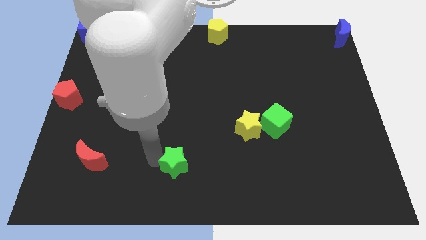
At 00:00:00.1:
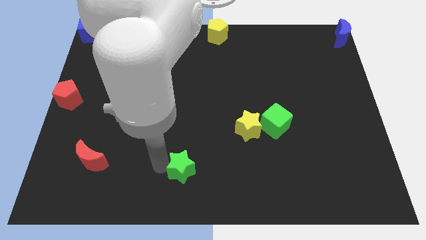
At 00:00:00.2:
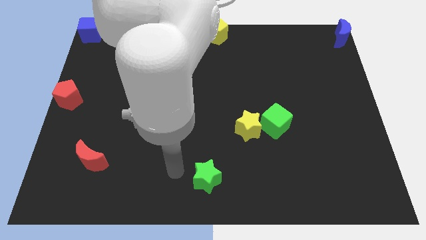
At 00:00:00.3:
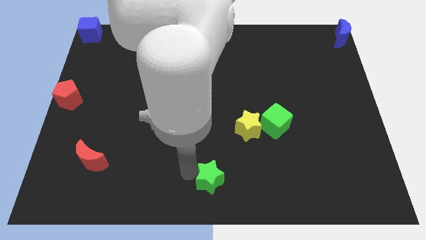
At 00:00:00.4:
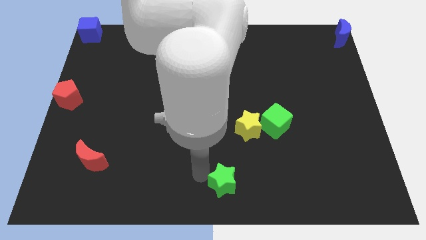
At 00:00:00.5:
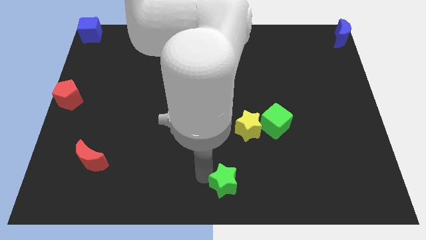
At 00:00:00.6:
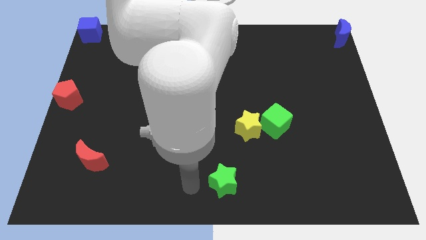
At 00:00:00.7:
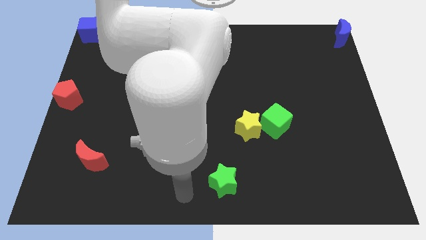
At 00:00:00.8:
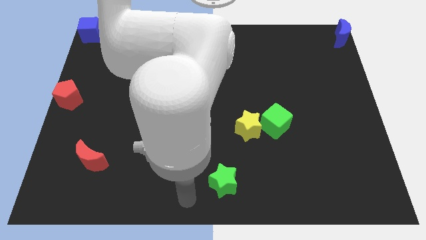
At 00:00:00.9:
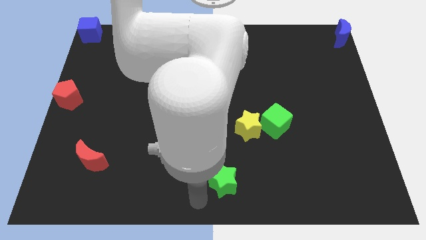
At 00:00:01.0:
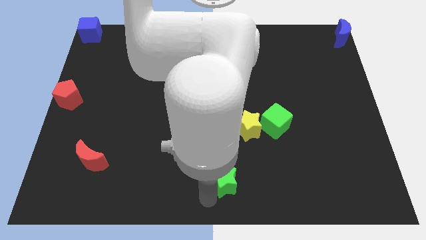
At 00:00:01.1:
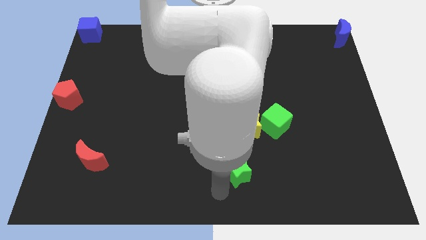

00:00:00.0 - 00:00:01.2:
push the green star to the right of the board

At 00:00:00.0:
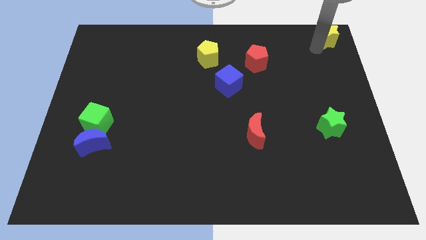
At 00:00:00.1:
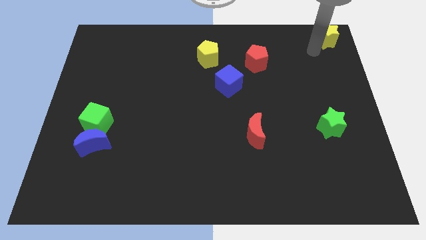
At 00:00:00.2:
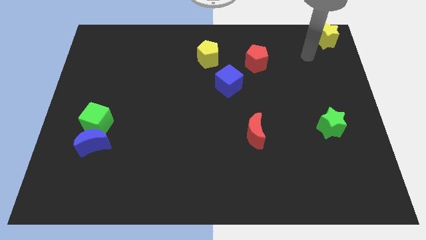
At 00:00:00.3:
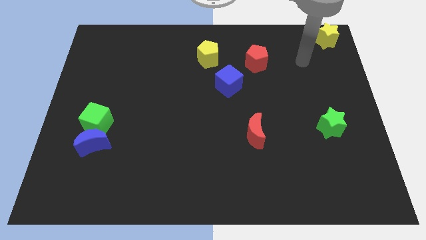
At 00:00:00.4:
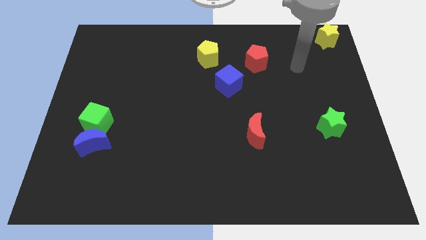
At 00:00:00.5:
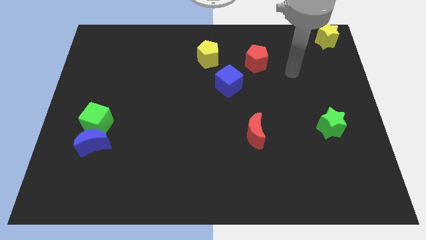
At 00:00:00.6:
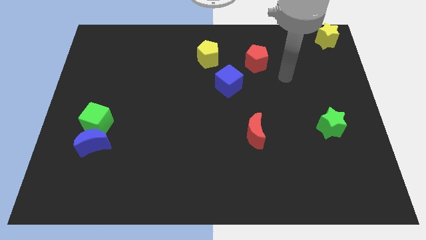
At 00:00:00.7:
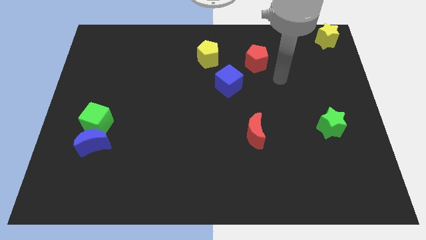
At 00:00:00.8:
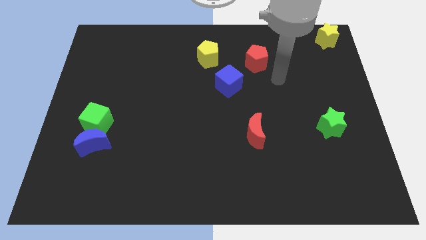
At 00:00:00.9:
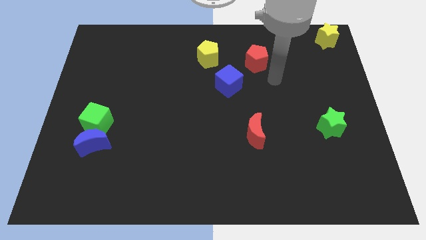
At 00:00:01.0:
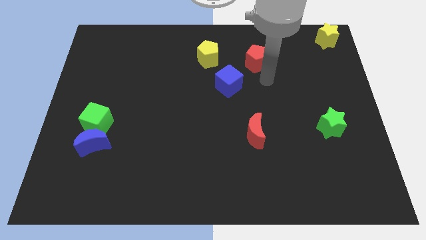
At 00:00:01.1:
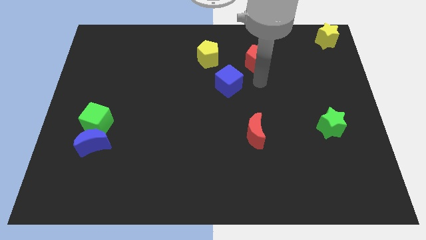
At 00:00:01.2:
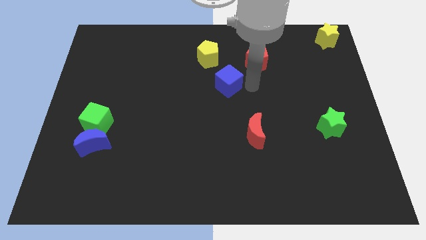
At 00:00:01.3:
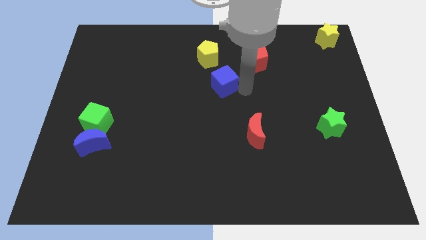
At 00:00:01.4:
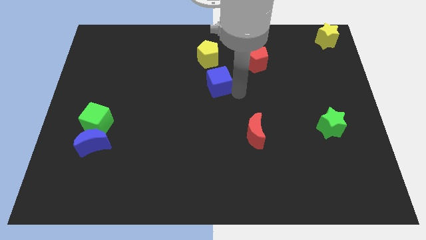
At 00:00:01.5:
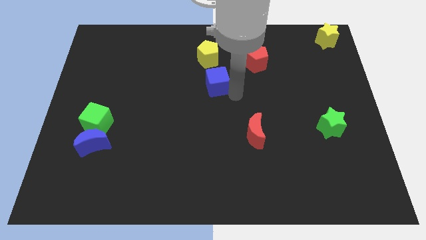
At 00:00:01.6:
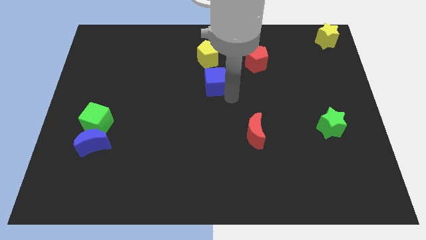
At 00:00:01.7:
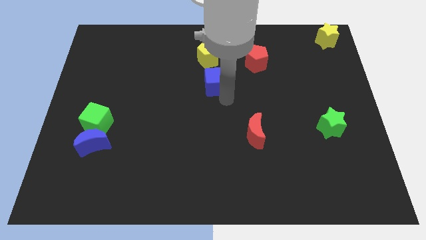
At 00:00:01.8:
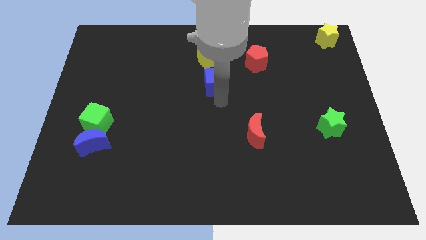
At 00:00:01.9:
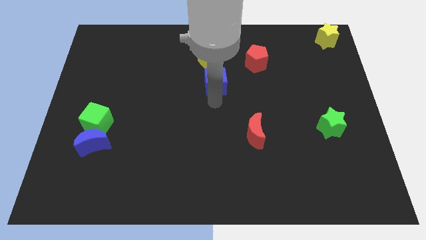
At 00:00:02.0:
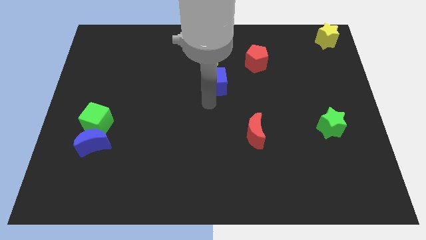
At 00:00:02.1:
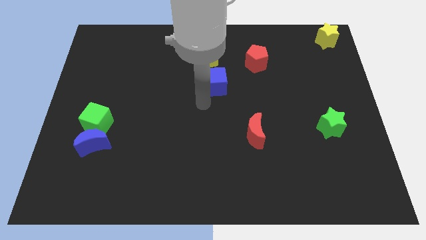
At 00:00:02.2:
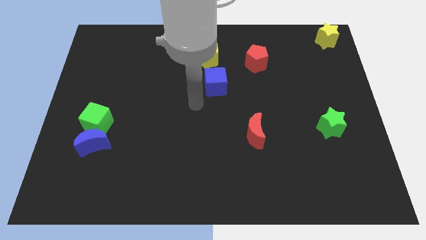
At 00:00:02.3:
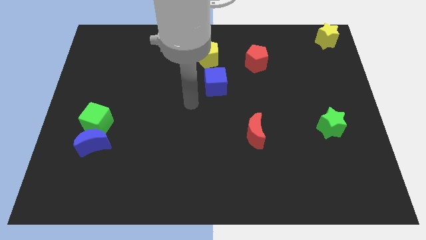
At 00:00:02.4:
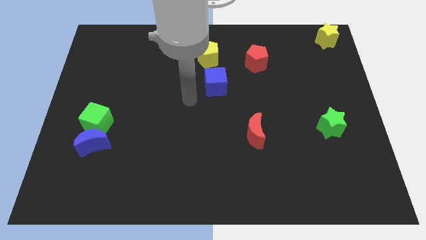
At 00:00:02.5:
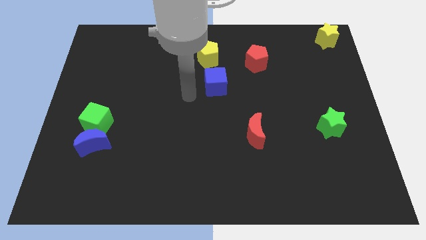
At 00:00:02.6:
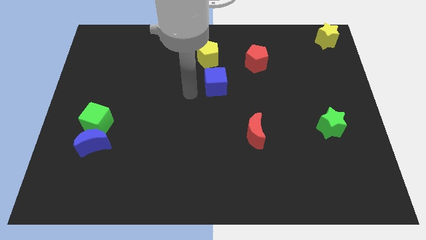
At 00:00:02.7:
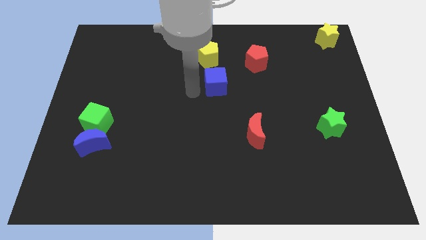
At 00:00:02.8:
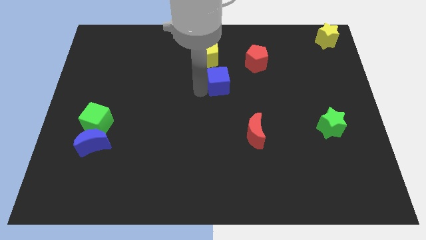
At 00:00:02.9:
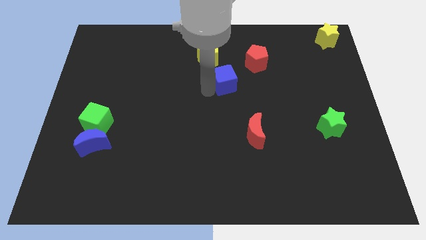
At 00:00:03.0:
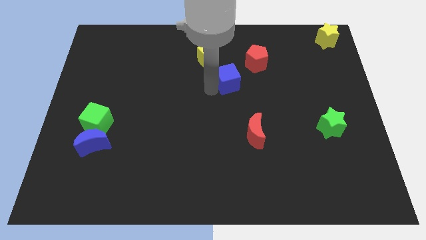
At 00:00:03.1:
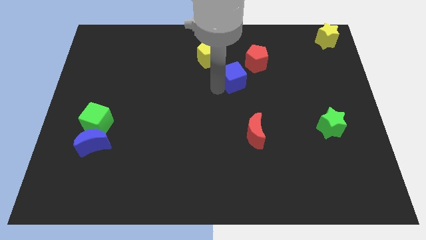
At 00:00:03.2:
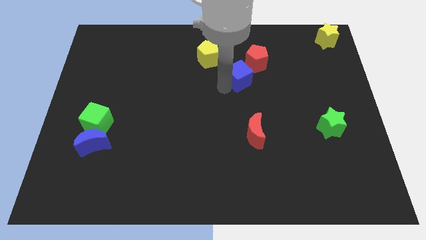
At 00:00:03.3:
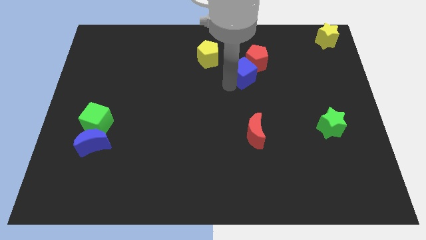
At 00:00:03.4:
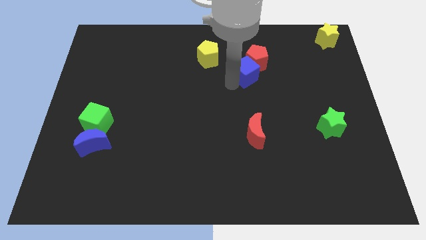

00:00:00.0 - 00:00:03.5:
move your arm from yellow star to blue cube

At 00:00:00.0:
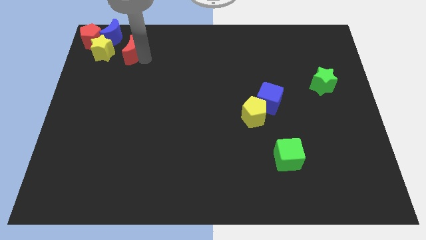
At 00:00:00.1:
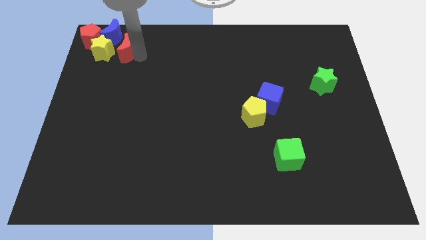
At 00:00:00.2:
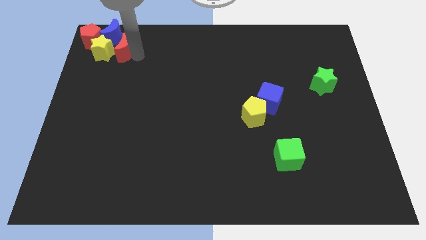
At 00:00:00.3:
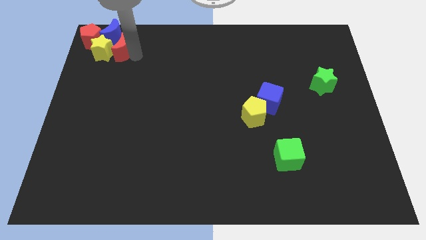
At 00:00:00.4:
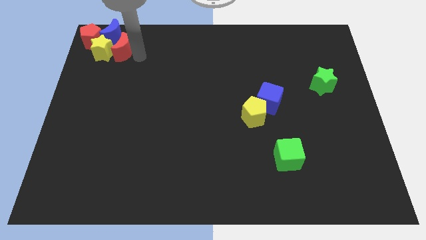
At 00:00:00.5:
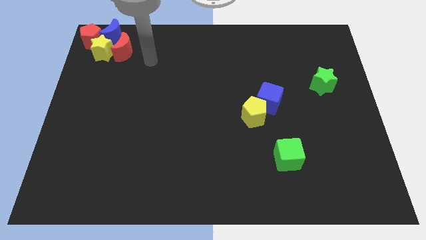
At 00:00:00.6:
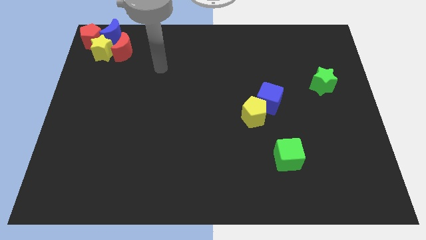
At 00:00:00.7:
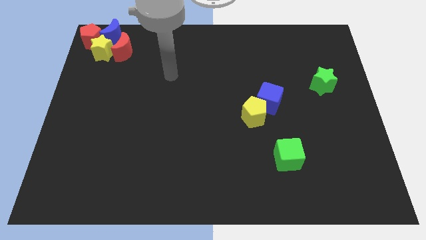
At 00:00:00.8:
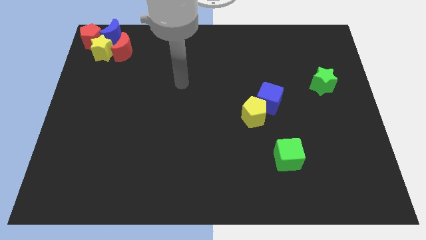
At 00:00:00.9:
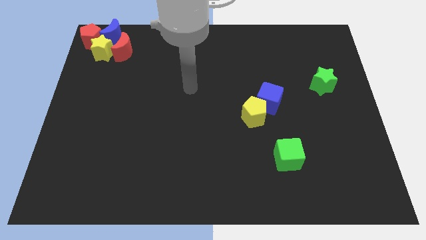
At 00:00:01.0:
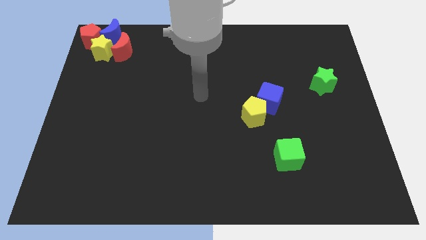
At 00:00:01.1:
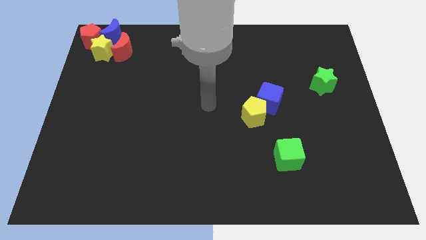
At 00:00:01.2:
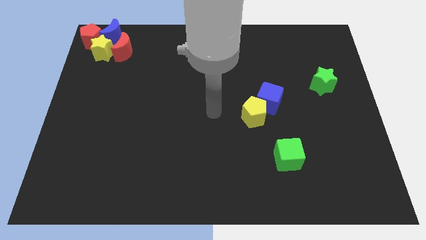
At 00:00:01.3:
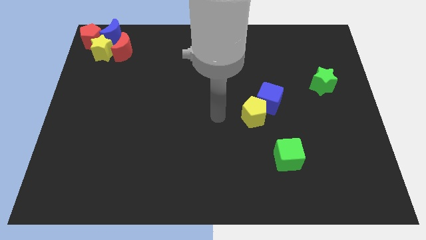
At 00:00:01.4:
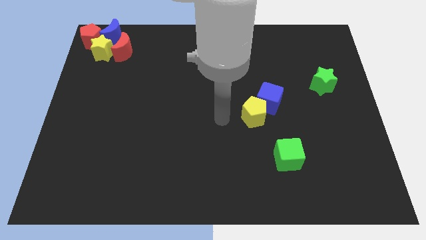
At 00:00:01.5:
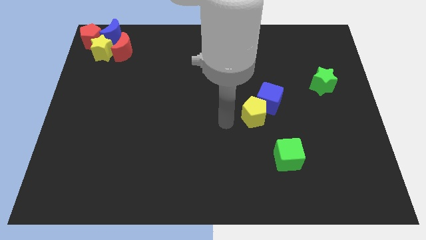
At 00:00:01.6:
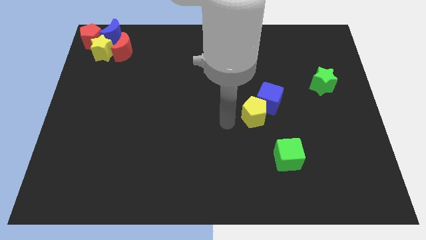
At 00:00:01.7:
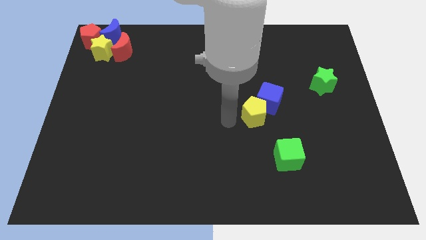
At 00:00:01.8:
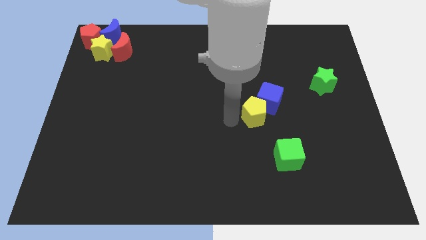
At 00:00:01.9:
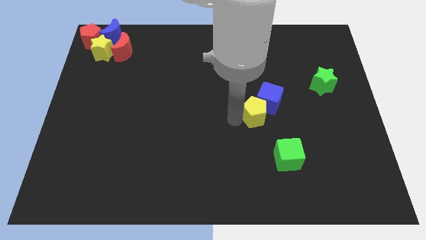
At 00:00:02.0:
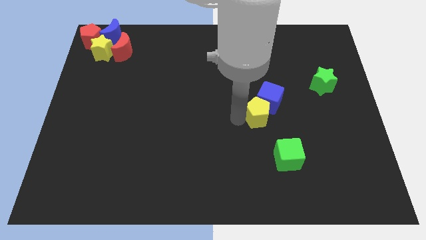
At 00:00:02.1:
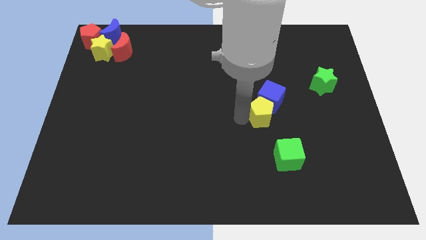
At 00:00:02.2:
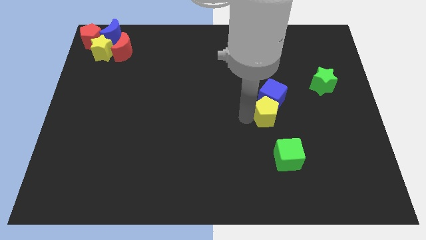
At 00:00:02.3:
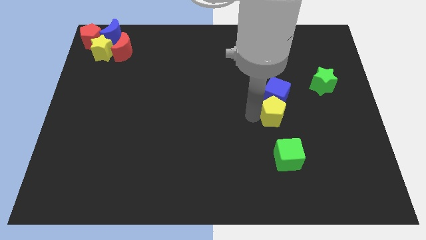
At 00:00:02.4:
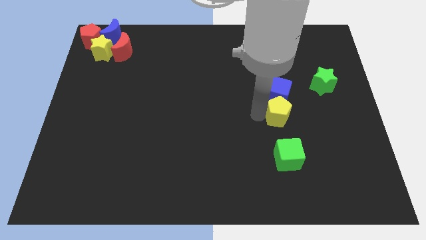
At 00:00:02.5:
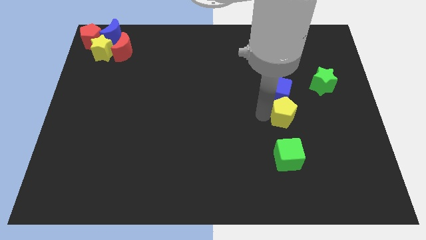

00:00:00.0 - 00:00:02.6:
place yellow pentagon to the bottom of blue cube

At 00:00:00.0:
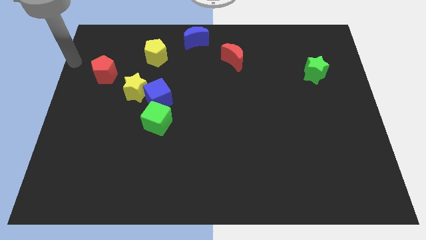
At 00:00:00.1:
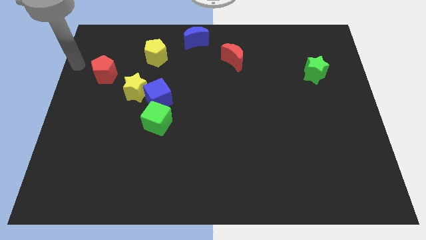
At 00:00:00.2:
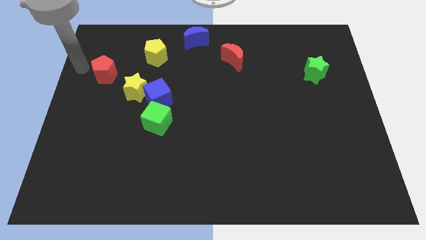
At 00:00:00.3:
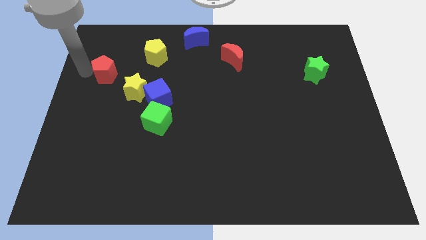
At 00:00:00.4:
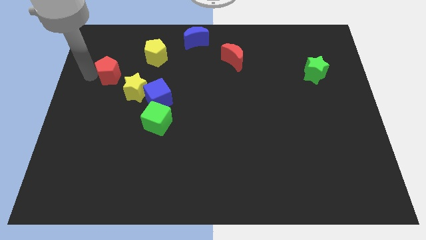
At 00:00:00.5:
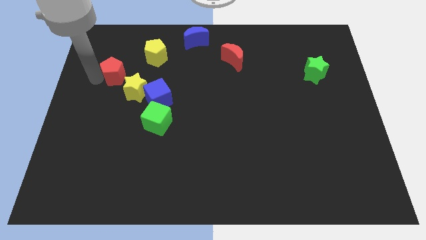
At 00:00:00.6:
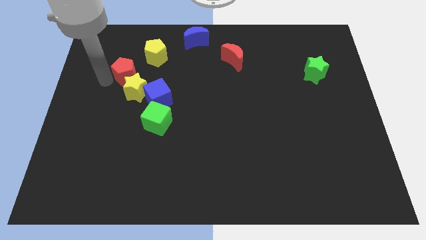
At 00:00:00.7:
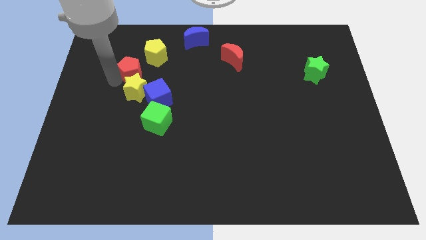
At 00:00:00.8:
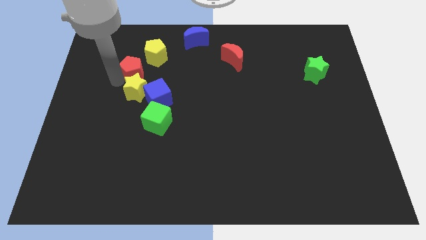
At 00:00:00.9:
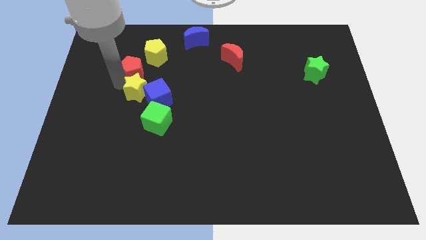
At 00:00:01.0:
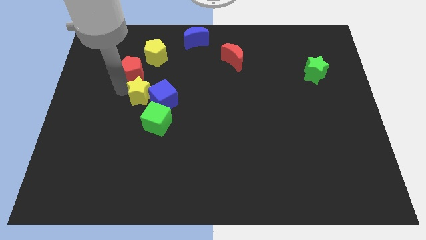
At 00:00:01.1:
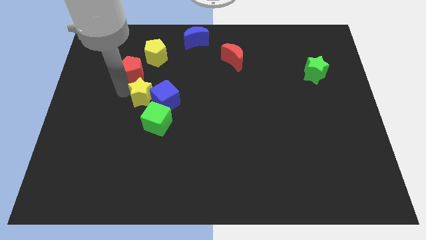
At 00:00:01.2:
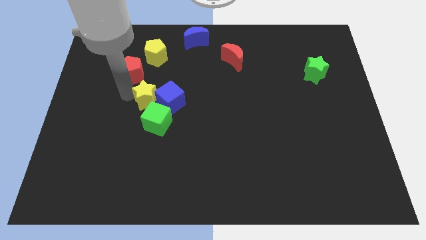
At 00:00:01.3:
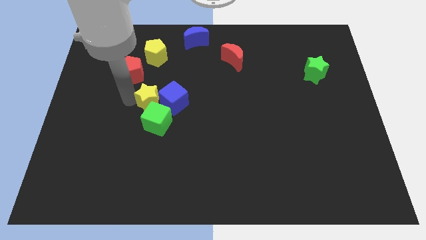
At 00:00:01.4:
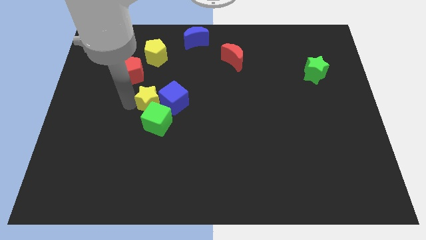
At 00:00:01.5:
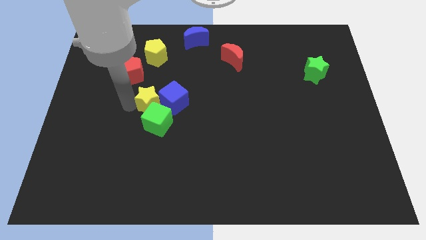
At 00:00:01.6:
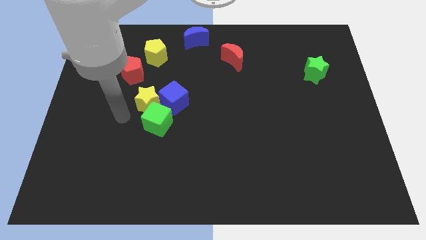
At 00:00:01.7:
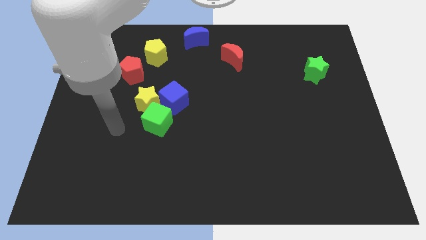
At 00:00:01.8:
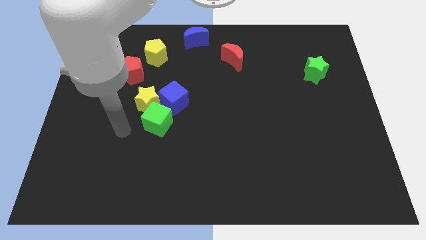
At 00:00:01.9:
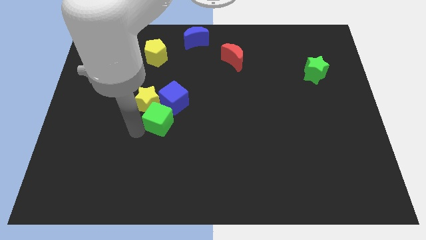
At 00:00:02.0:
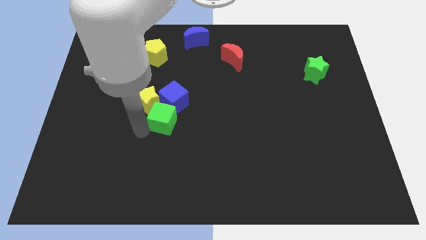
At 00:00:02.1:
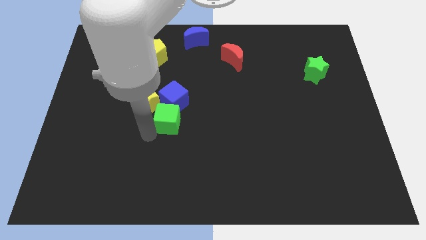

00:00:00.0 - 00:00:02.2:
push the red pentagon and yellow star towards the bottom left of the green cube
